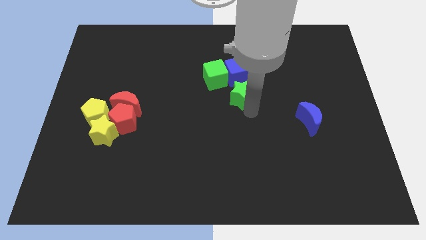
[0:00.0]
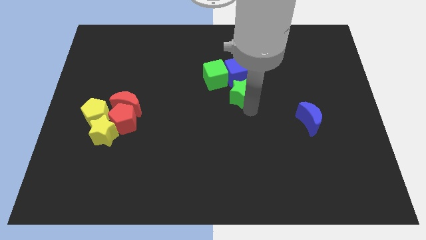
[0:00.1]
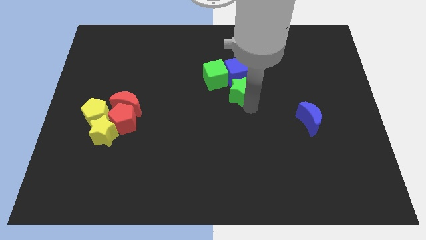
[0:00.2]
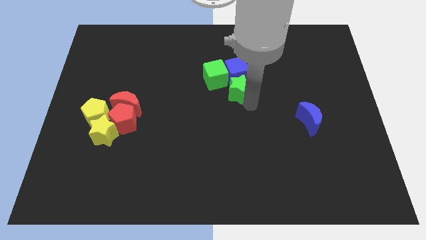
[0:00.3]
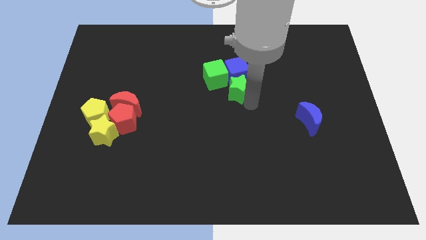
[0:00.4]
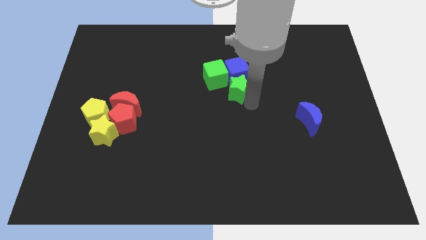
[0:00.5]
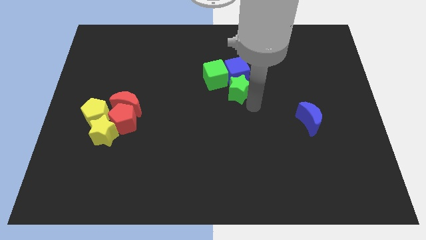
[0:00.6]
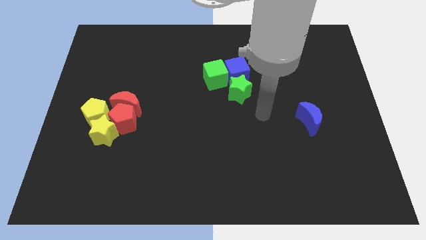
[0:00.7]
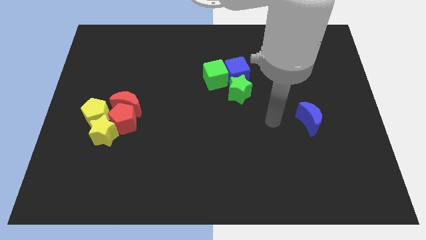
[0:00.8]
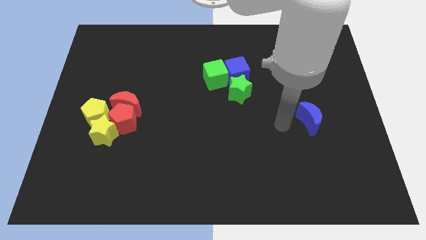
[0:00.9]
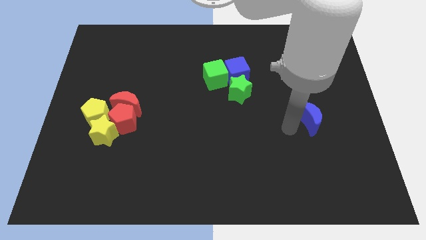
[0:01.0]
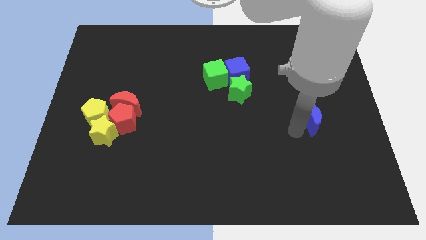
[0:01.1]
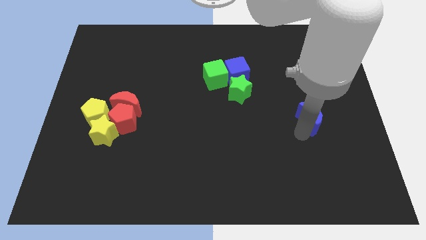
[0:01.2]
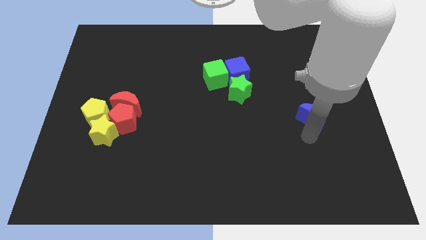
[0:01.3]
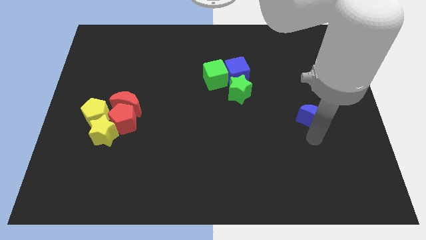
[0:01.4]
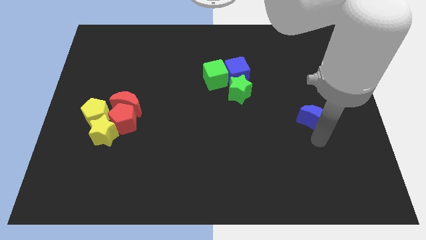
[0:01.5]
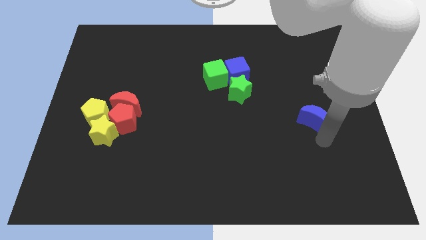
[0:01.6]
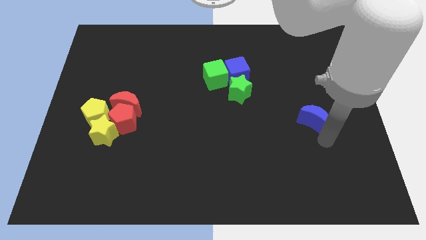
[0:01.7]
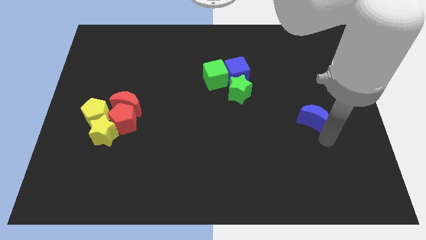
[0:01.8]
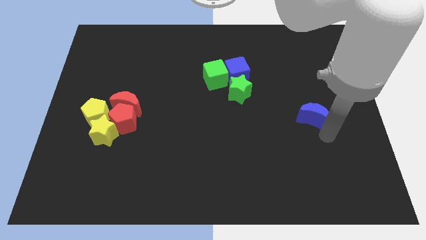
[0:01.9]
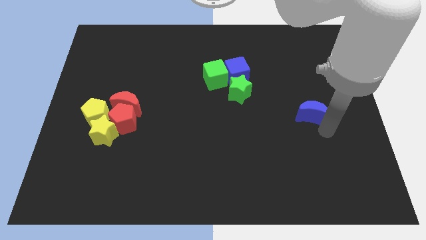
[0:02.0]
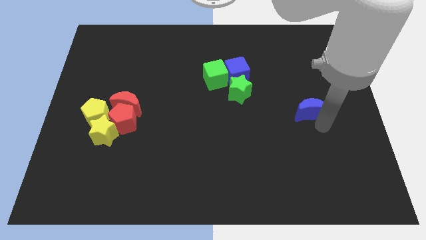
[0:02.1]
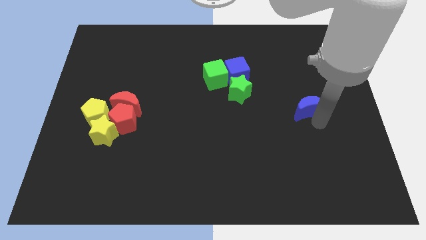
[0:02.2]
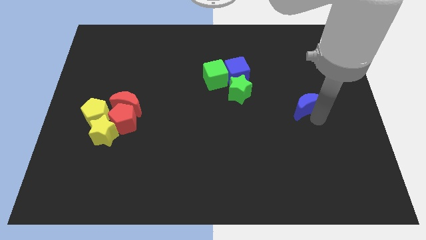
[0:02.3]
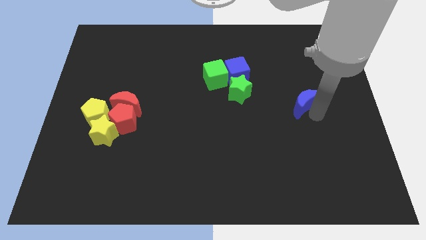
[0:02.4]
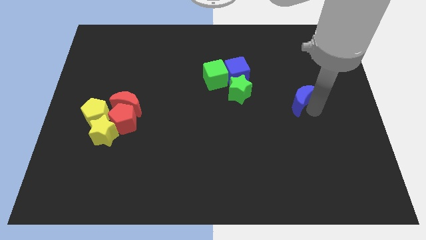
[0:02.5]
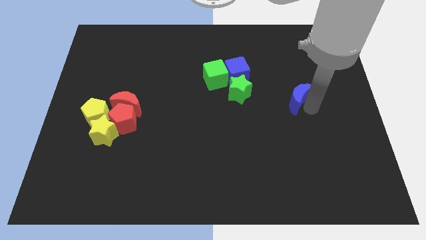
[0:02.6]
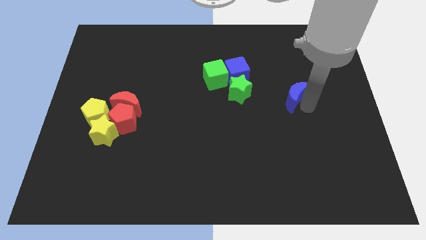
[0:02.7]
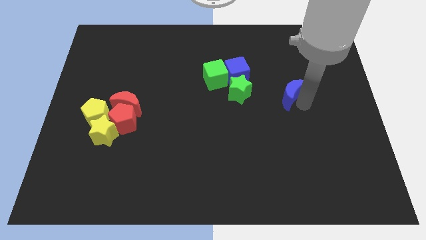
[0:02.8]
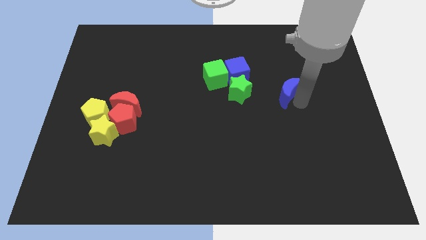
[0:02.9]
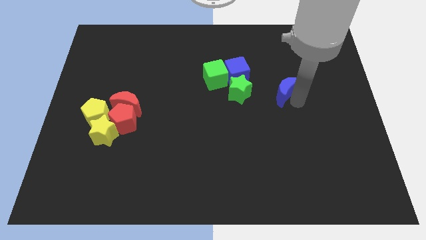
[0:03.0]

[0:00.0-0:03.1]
move the blue moon to the right side of the green star

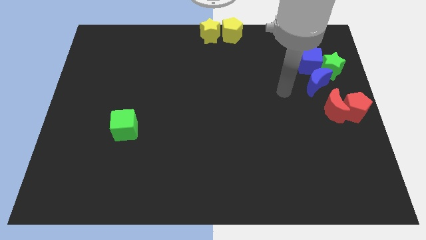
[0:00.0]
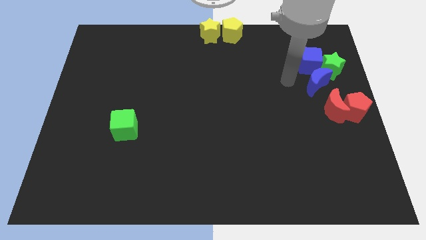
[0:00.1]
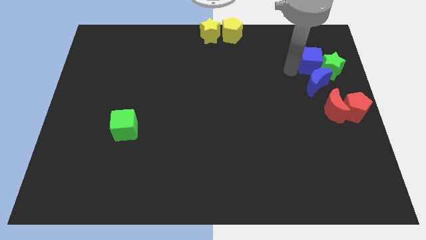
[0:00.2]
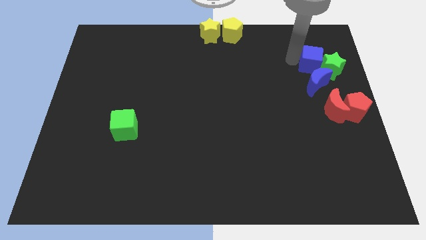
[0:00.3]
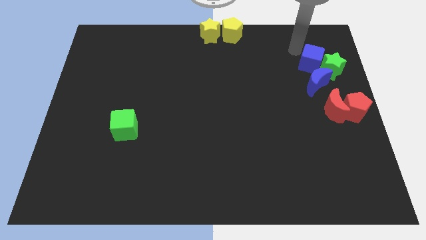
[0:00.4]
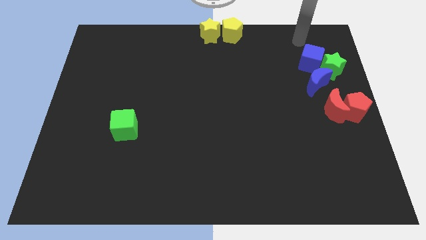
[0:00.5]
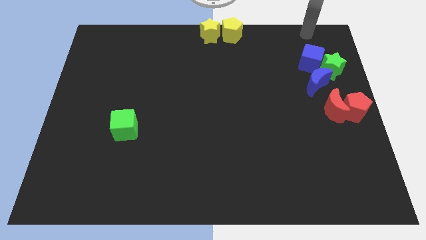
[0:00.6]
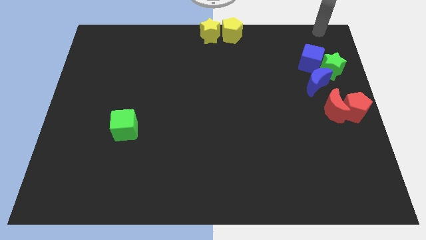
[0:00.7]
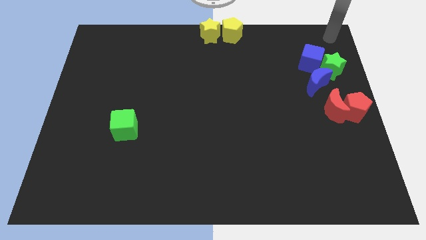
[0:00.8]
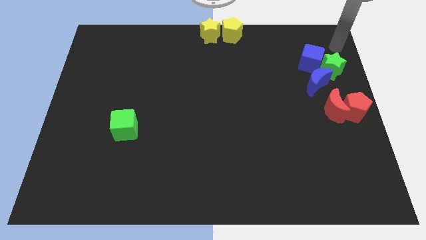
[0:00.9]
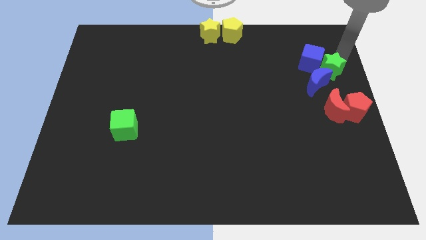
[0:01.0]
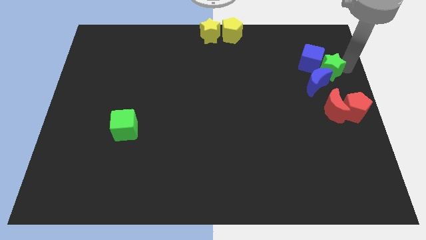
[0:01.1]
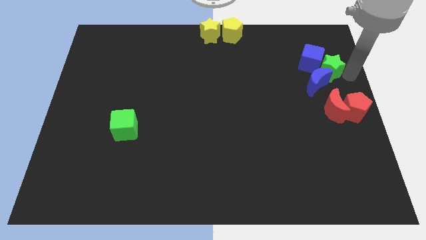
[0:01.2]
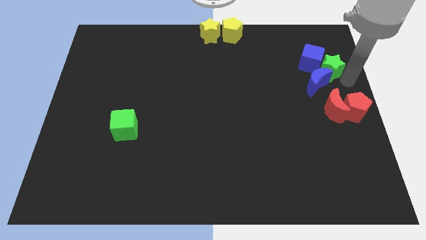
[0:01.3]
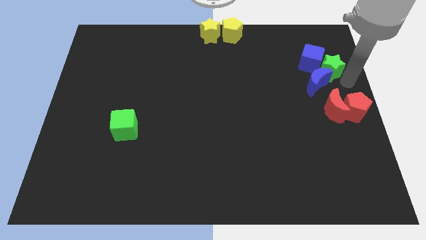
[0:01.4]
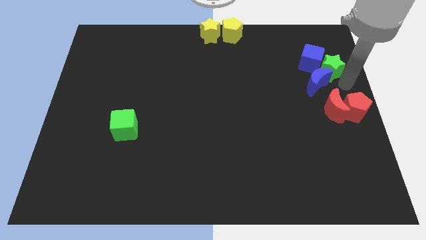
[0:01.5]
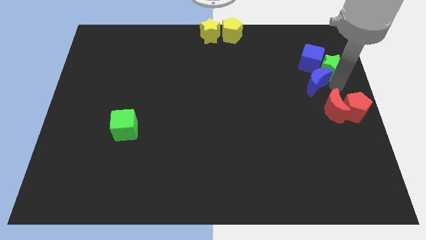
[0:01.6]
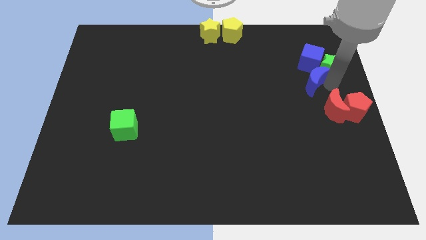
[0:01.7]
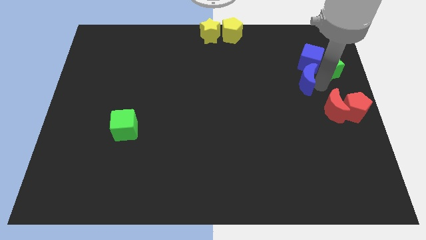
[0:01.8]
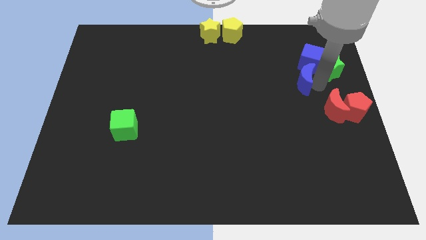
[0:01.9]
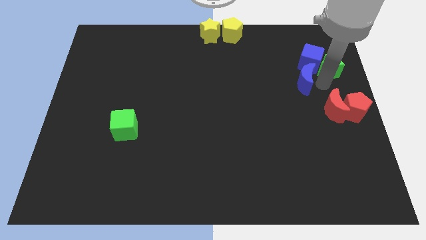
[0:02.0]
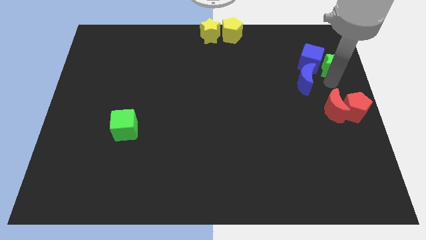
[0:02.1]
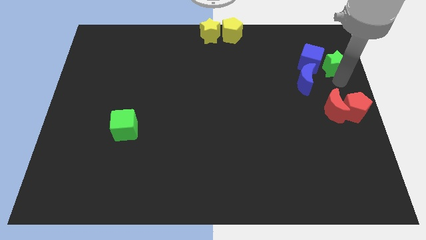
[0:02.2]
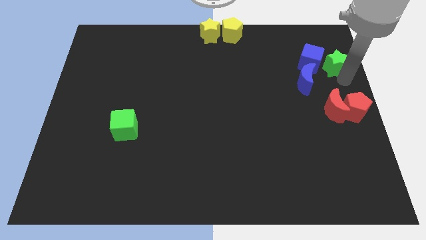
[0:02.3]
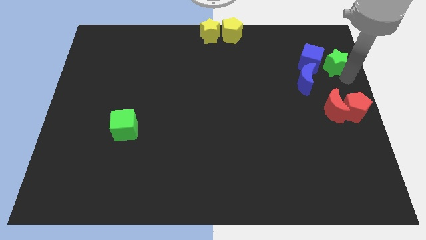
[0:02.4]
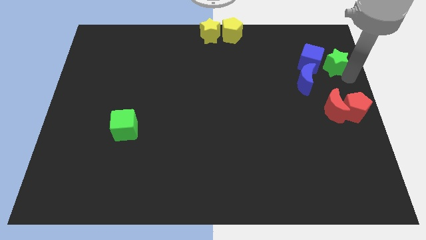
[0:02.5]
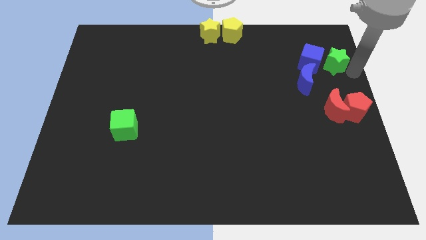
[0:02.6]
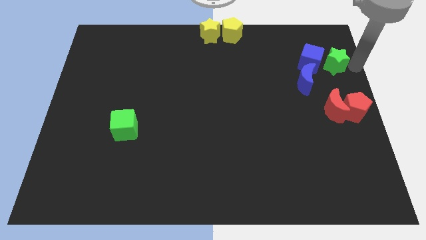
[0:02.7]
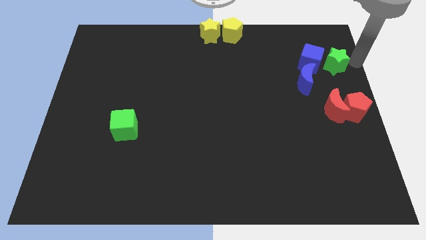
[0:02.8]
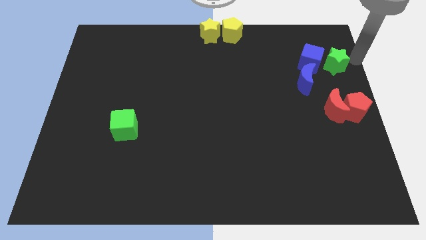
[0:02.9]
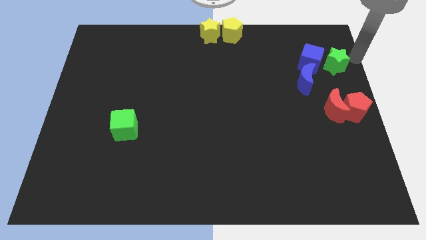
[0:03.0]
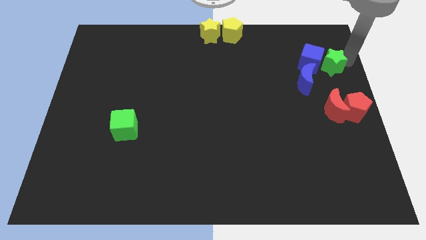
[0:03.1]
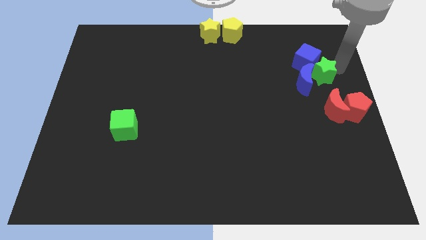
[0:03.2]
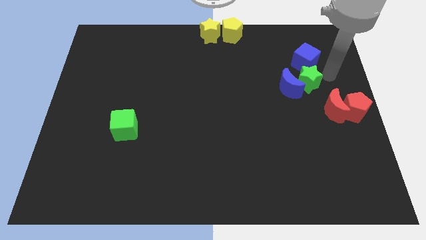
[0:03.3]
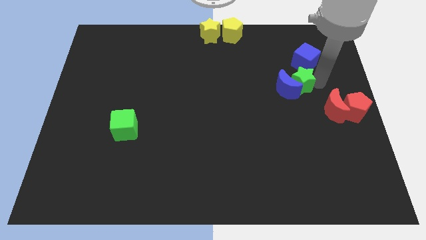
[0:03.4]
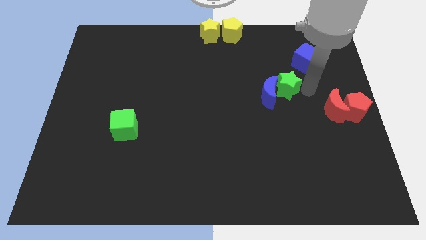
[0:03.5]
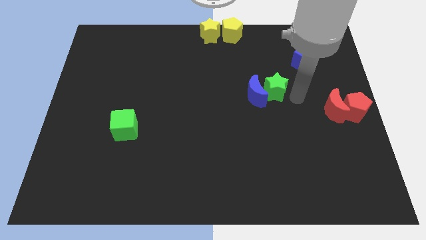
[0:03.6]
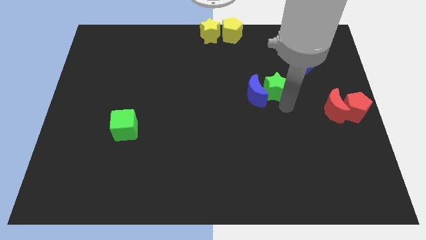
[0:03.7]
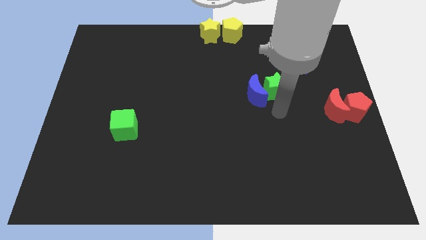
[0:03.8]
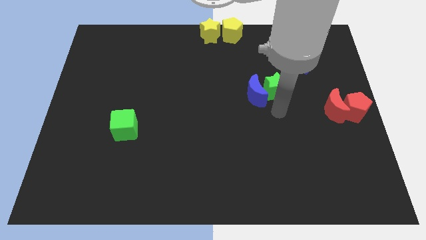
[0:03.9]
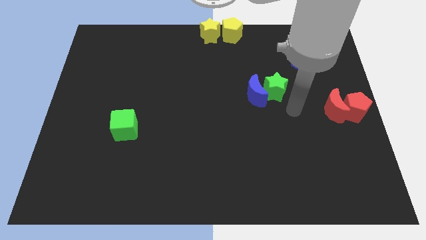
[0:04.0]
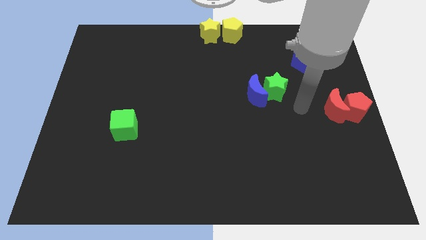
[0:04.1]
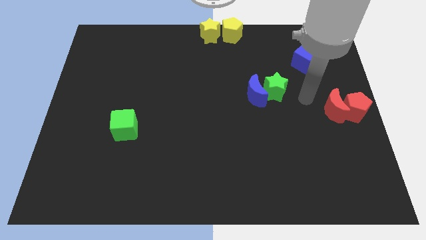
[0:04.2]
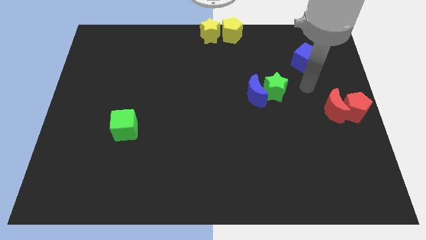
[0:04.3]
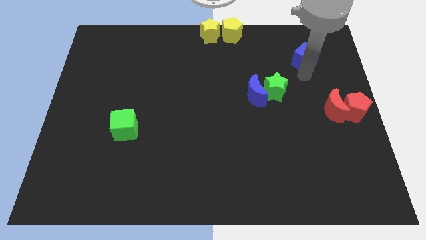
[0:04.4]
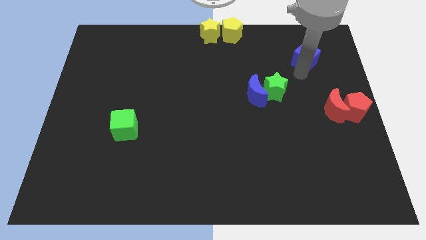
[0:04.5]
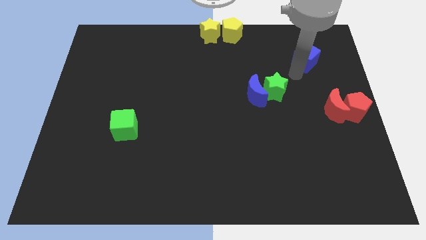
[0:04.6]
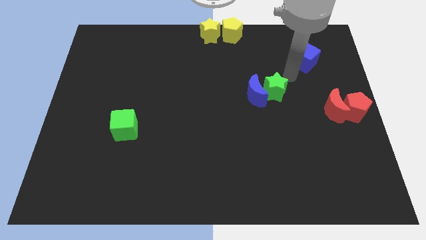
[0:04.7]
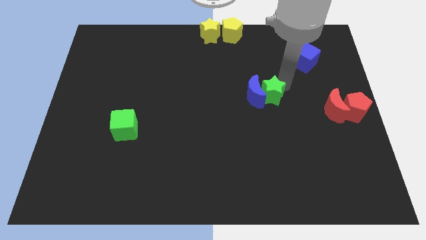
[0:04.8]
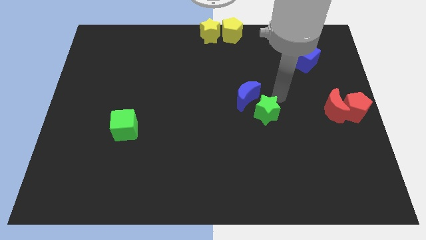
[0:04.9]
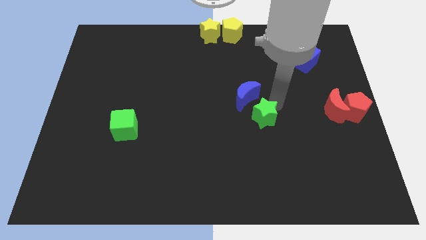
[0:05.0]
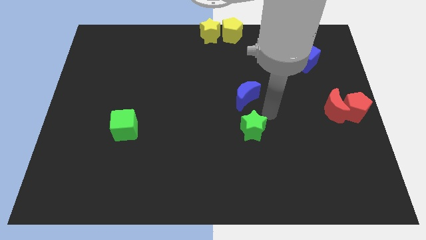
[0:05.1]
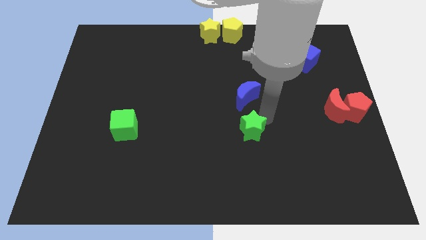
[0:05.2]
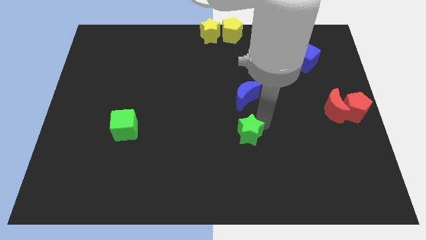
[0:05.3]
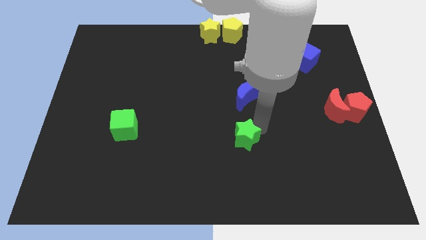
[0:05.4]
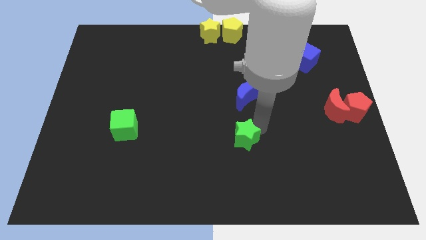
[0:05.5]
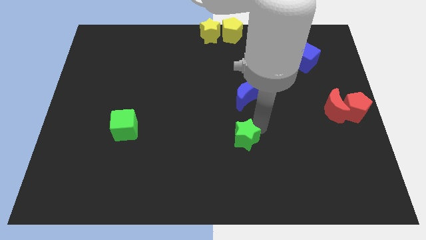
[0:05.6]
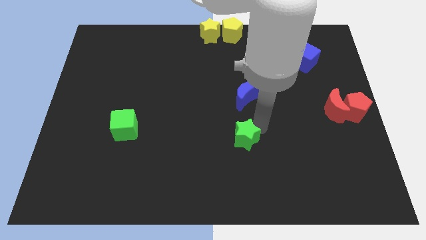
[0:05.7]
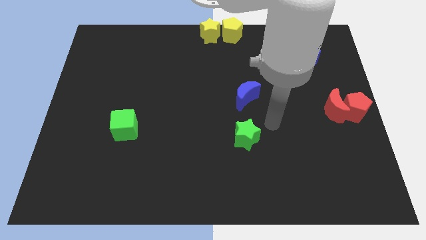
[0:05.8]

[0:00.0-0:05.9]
adjust the green star below the blue crescent
